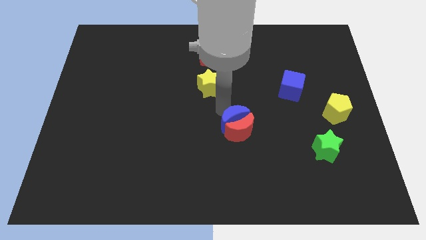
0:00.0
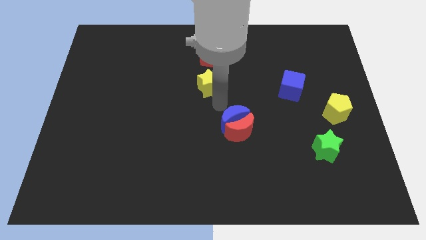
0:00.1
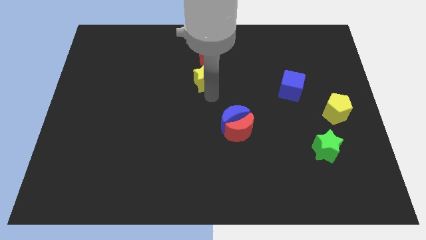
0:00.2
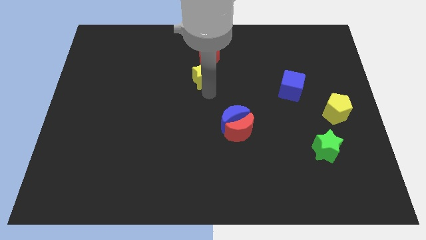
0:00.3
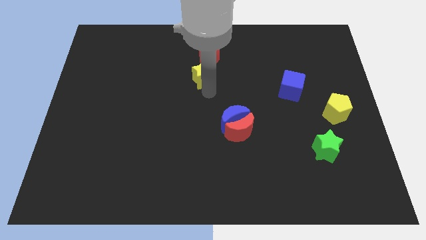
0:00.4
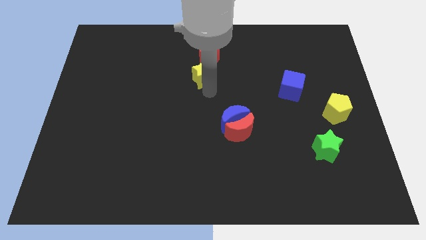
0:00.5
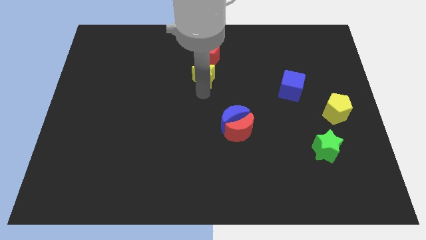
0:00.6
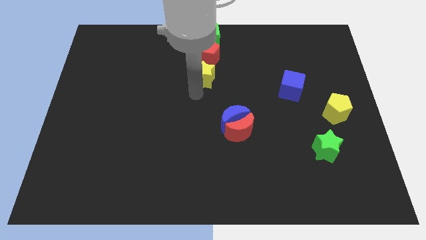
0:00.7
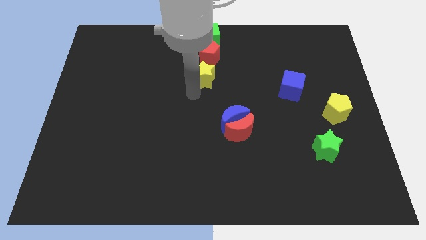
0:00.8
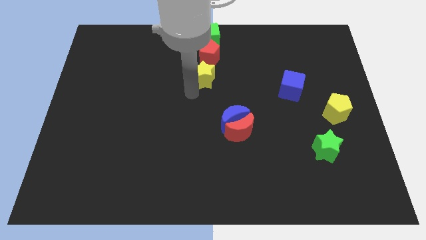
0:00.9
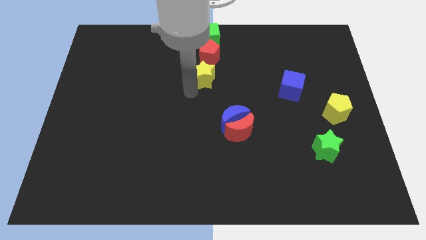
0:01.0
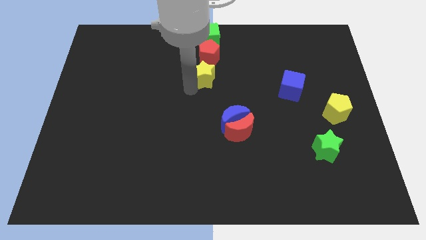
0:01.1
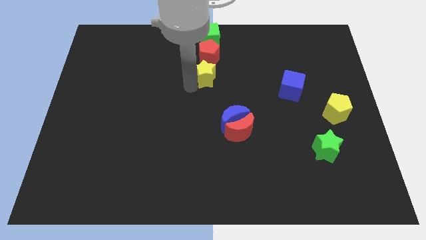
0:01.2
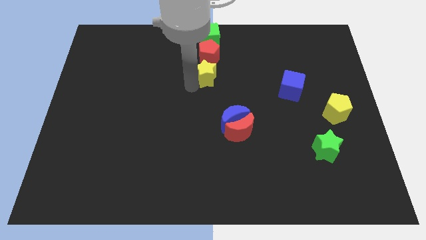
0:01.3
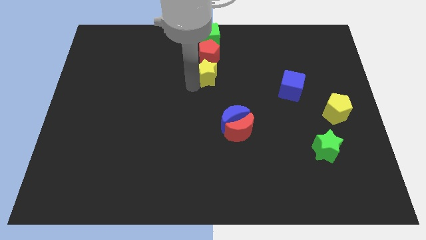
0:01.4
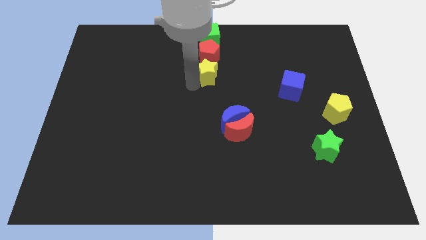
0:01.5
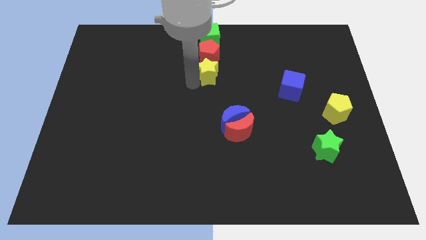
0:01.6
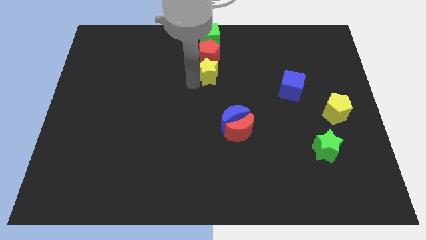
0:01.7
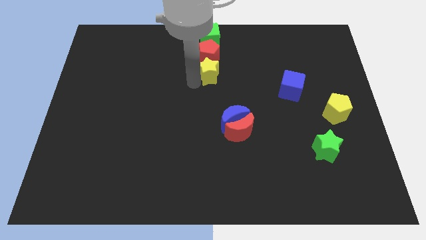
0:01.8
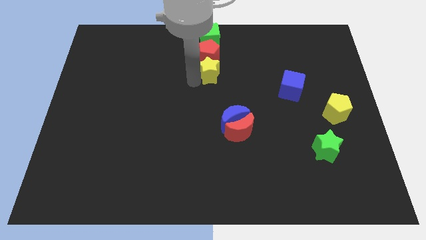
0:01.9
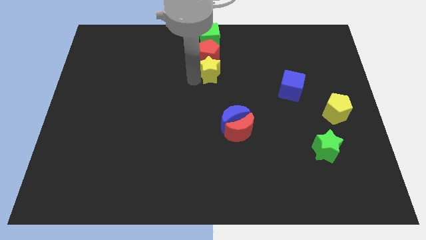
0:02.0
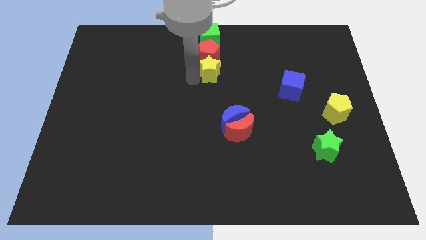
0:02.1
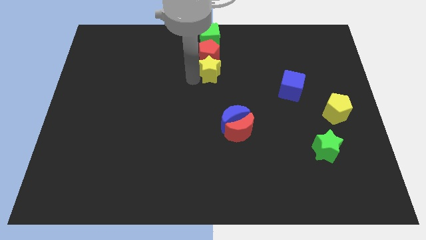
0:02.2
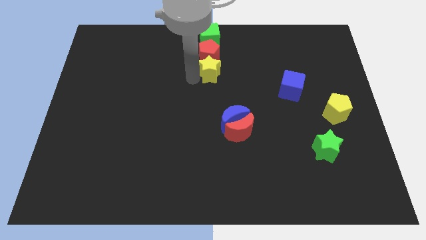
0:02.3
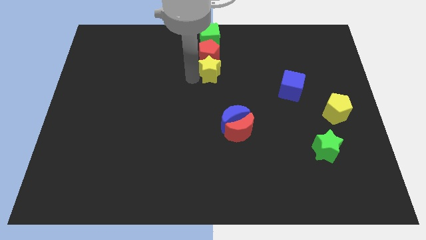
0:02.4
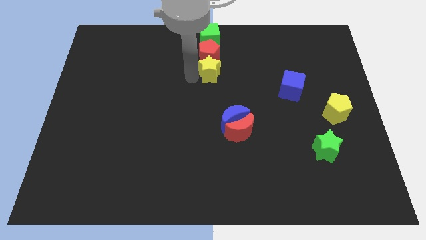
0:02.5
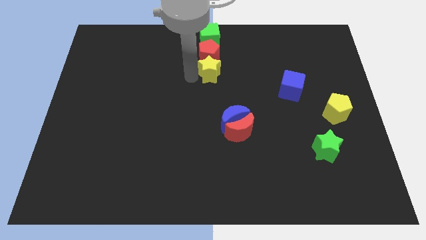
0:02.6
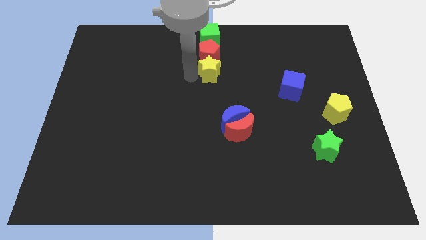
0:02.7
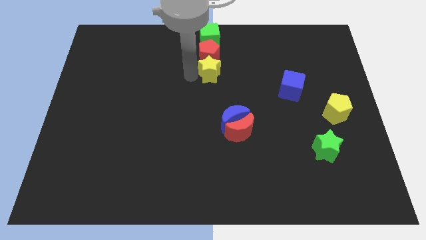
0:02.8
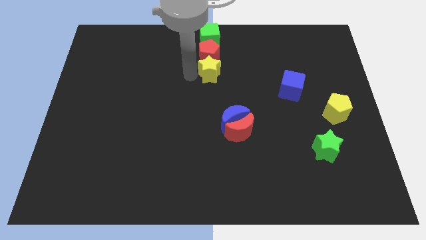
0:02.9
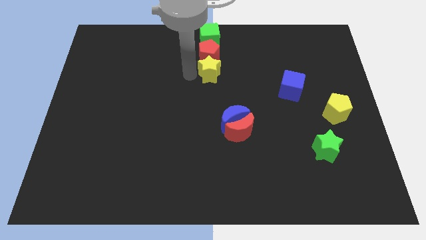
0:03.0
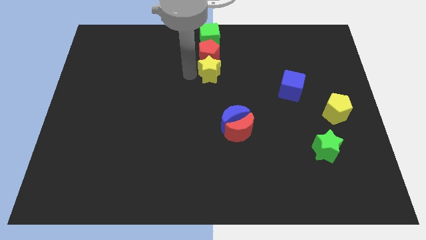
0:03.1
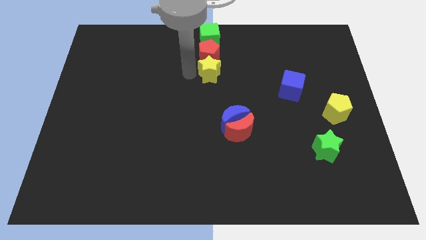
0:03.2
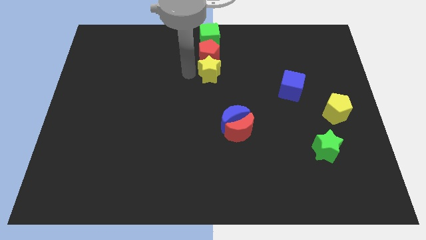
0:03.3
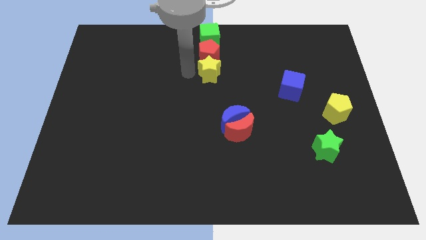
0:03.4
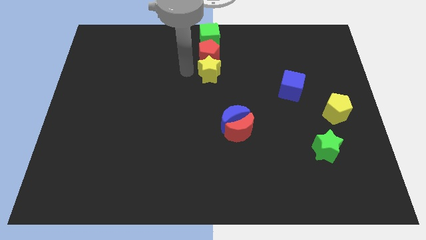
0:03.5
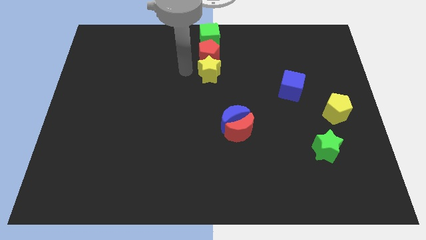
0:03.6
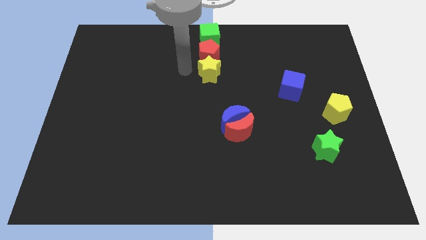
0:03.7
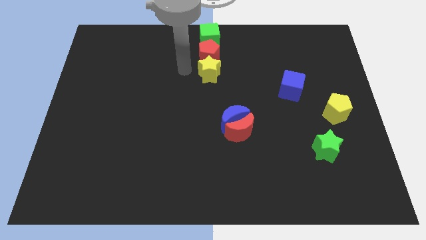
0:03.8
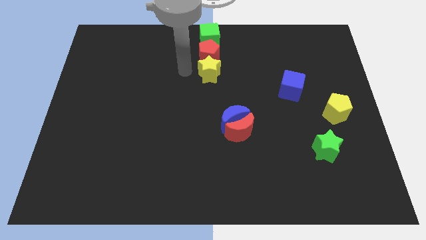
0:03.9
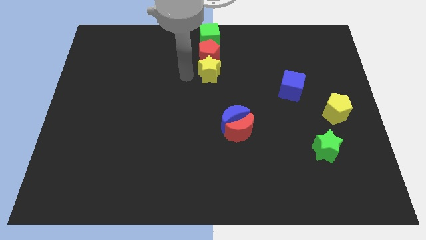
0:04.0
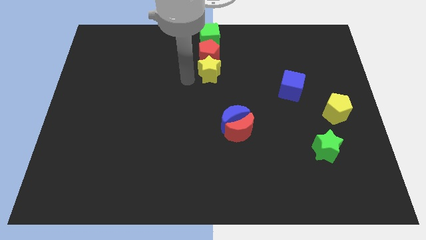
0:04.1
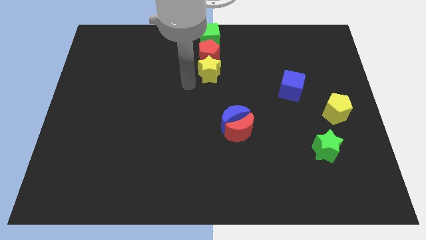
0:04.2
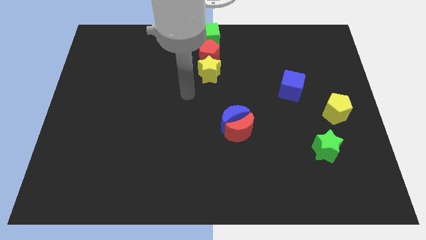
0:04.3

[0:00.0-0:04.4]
push the yellow star towards the bottom of the red pentagon

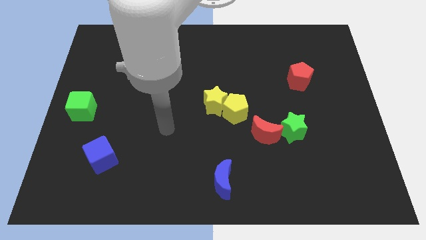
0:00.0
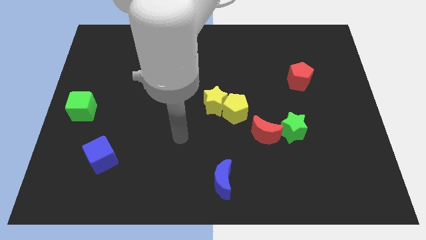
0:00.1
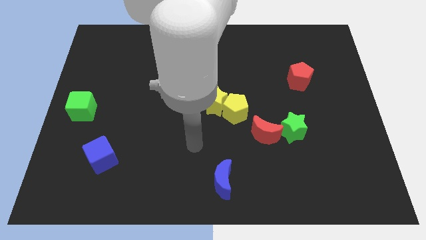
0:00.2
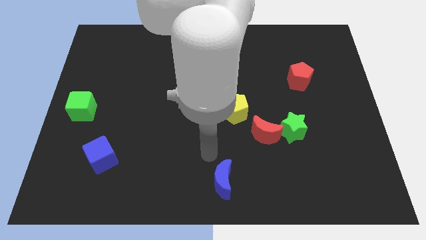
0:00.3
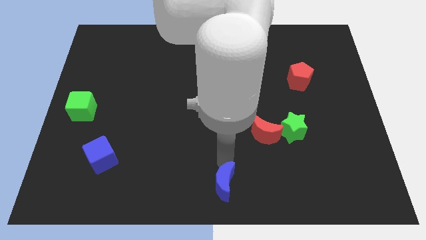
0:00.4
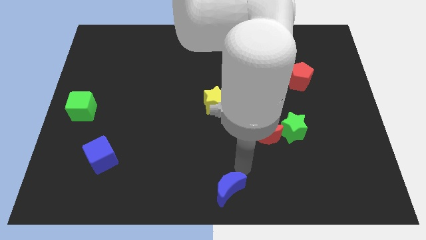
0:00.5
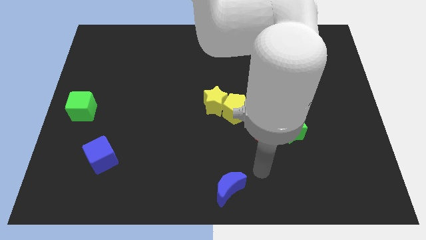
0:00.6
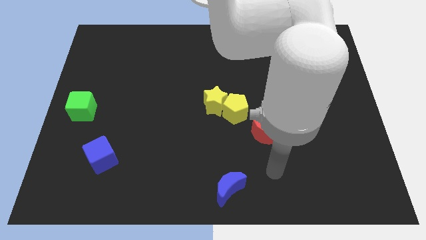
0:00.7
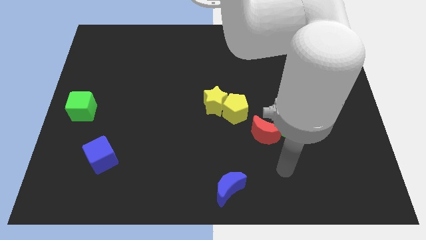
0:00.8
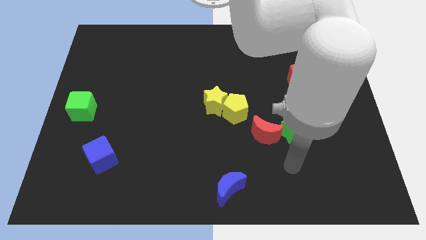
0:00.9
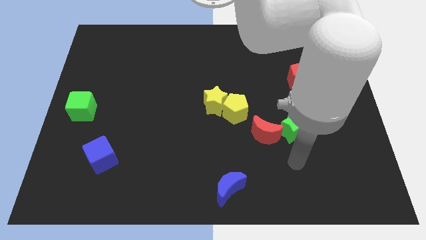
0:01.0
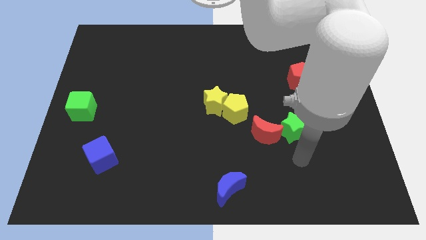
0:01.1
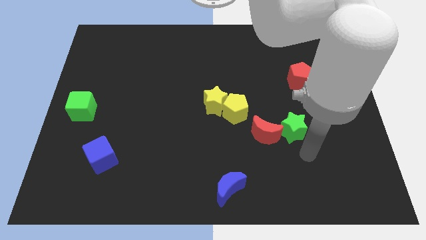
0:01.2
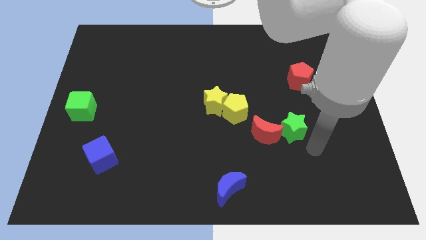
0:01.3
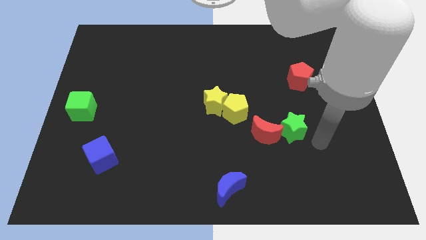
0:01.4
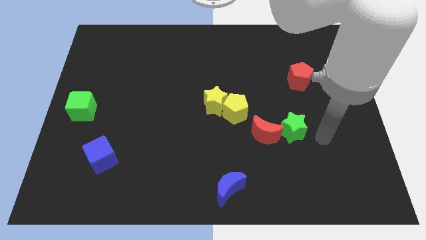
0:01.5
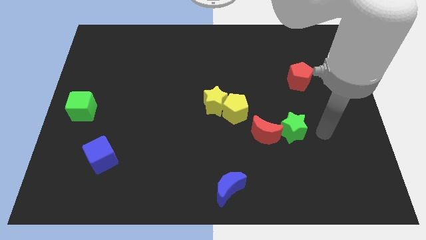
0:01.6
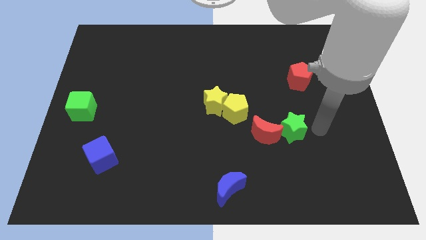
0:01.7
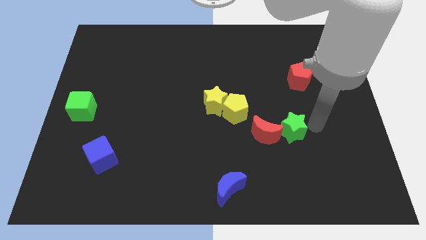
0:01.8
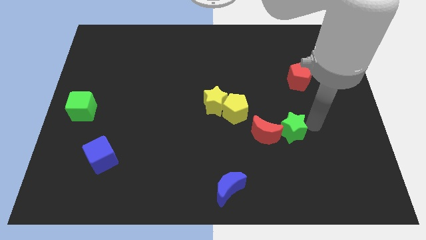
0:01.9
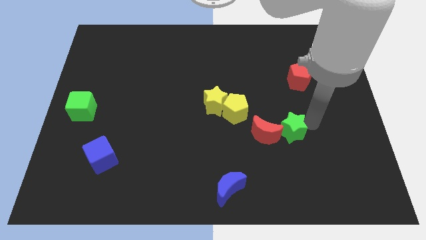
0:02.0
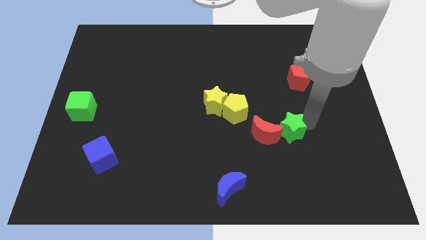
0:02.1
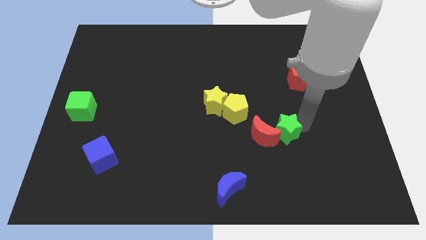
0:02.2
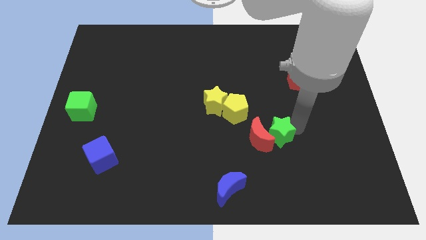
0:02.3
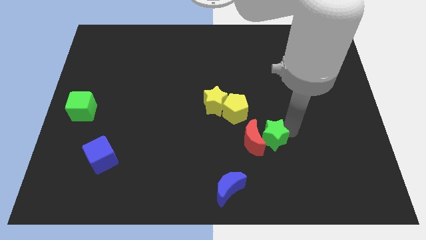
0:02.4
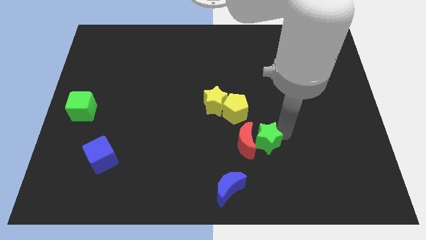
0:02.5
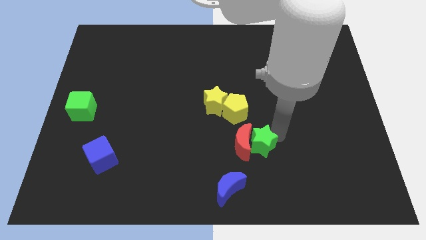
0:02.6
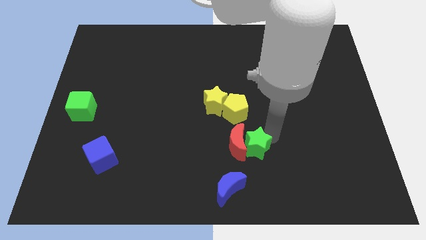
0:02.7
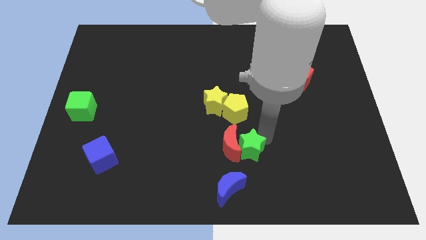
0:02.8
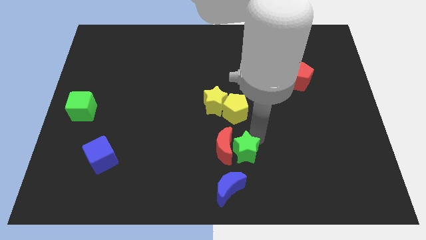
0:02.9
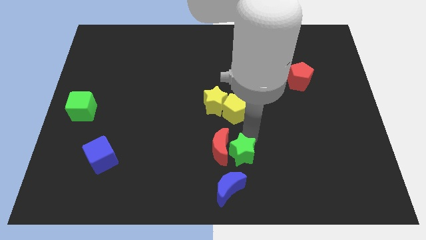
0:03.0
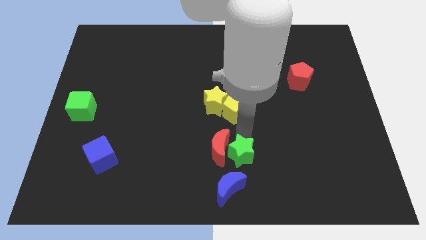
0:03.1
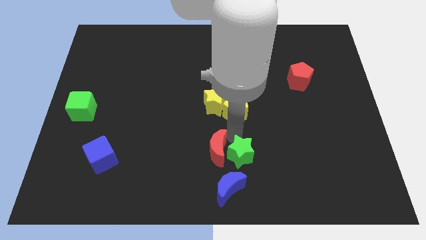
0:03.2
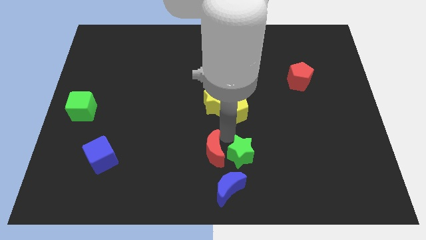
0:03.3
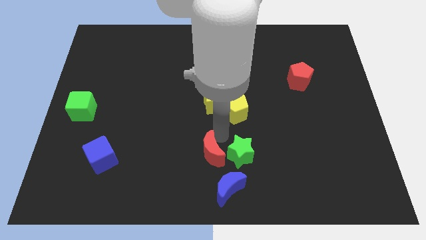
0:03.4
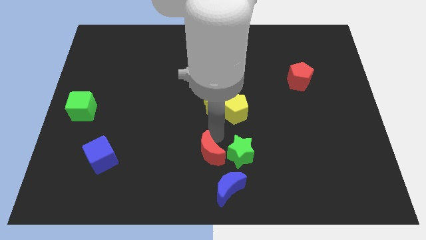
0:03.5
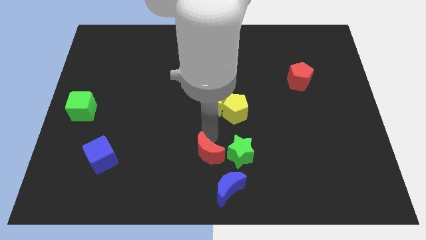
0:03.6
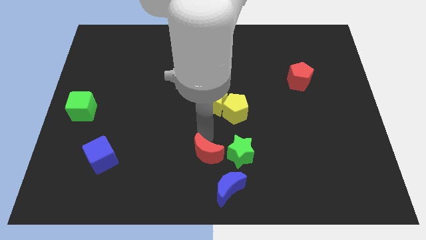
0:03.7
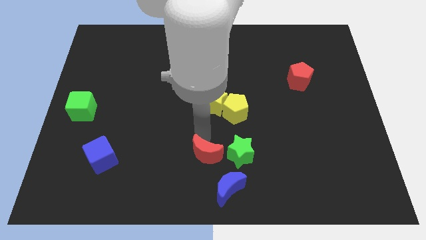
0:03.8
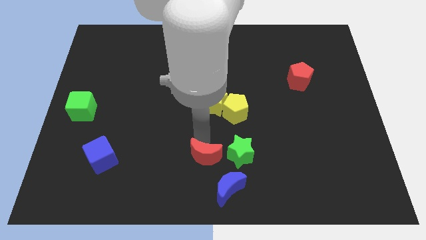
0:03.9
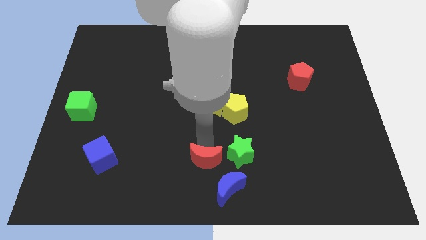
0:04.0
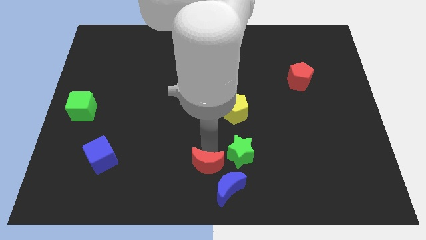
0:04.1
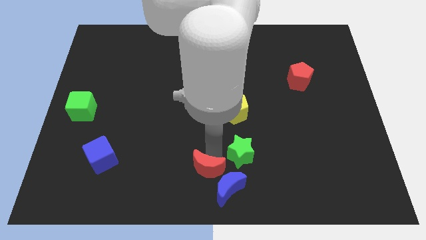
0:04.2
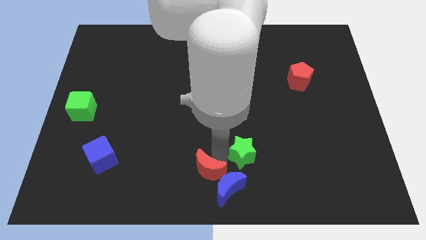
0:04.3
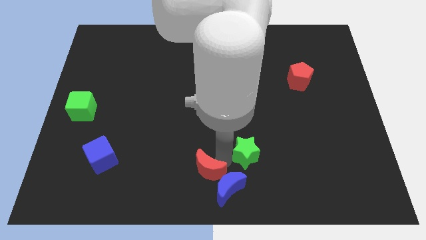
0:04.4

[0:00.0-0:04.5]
move the red crescent into the top side of the blue crescent

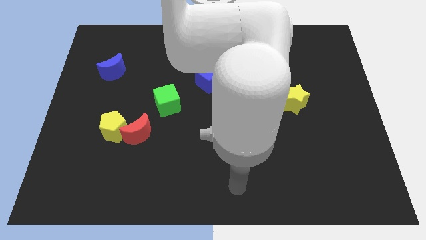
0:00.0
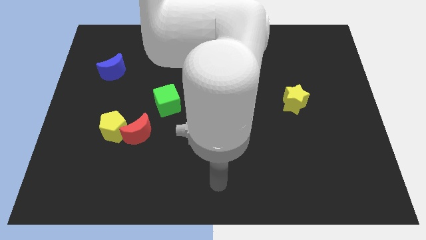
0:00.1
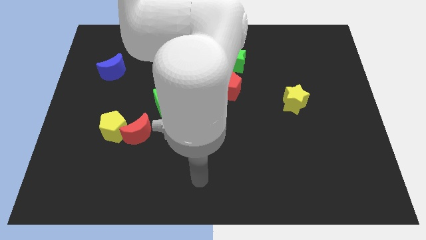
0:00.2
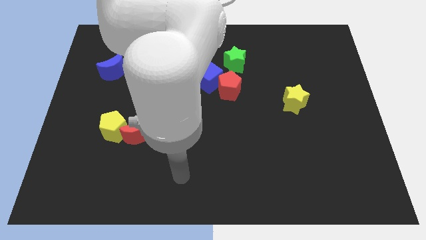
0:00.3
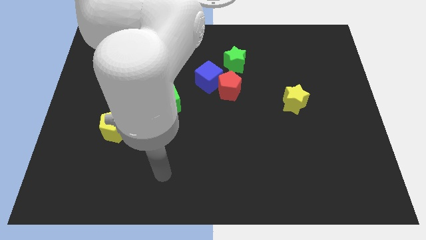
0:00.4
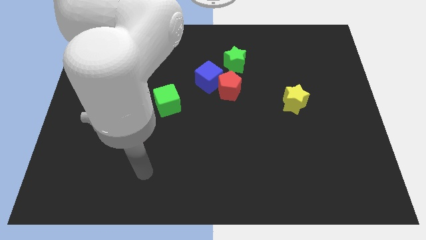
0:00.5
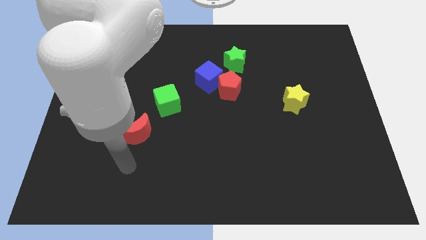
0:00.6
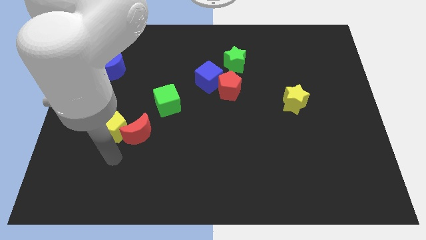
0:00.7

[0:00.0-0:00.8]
move arm near red moon
